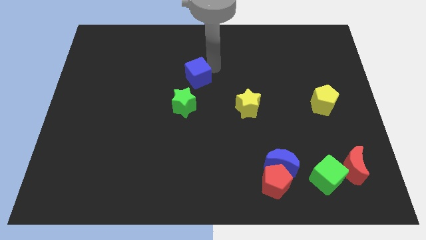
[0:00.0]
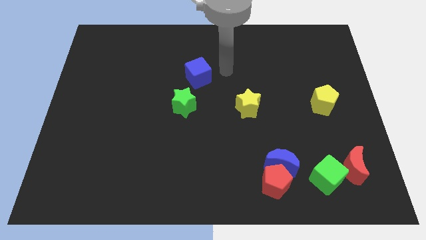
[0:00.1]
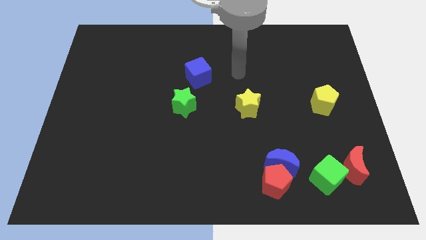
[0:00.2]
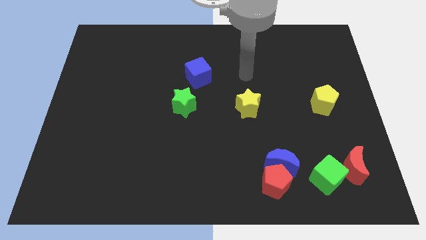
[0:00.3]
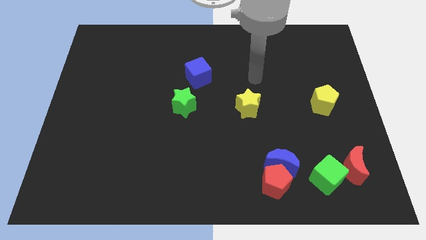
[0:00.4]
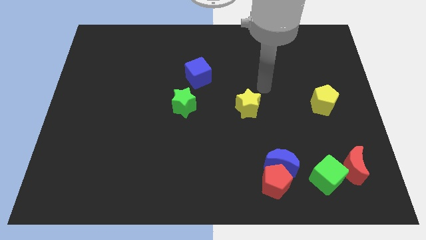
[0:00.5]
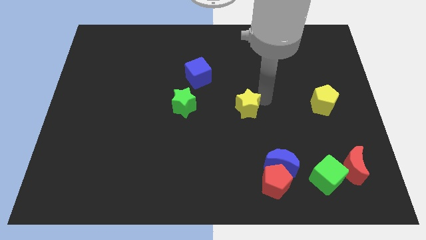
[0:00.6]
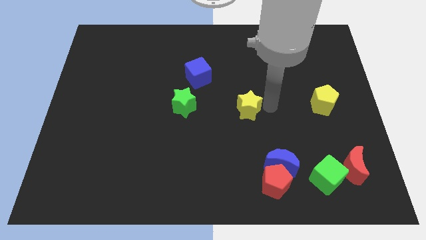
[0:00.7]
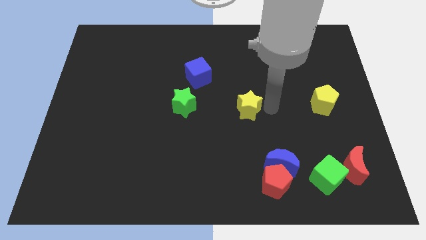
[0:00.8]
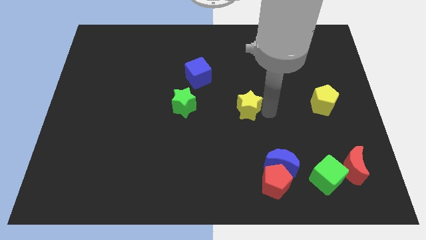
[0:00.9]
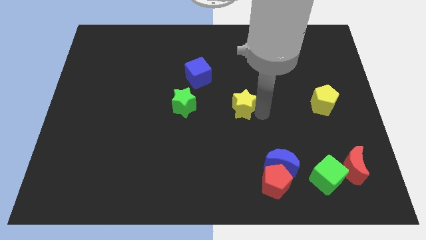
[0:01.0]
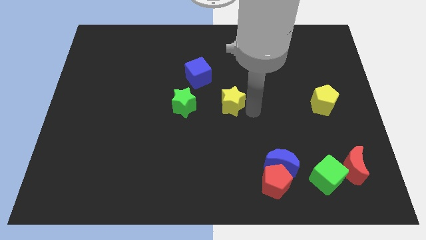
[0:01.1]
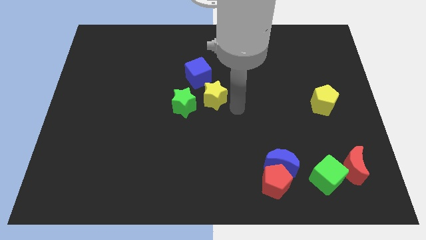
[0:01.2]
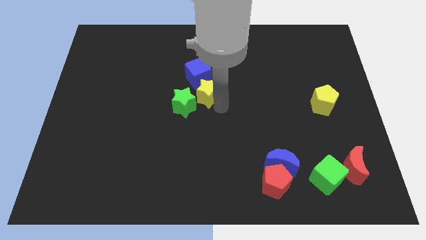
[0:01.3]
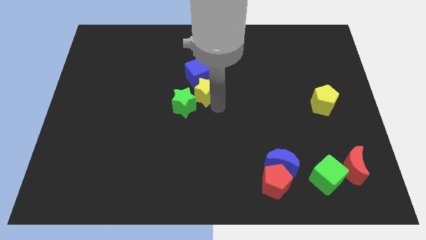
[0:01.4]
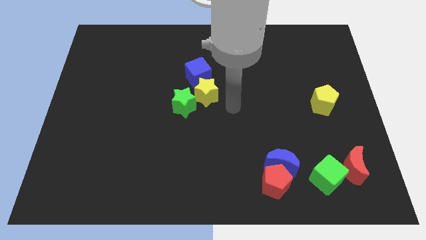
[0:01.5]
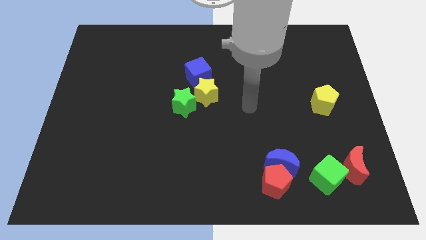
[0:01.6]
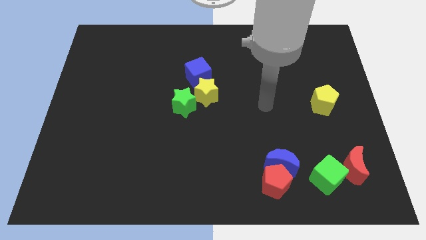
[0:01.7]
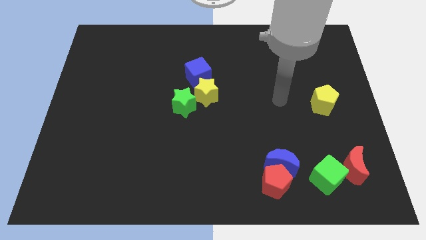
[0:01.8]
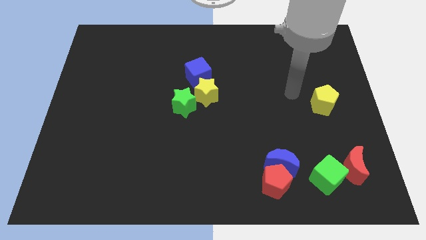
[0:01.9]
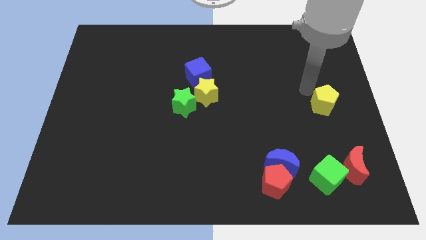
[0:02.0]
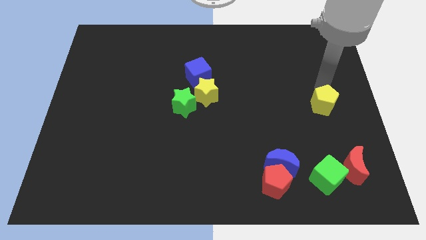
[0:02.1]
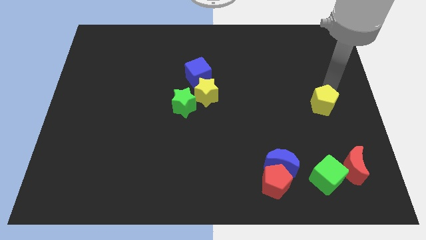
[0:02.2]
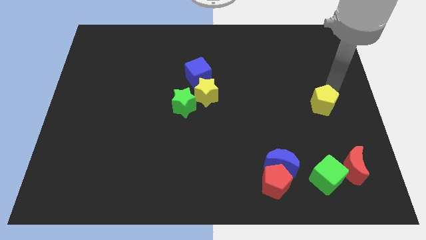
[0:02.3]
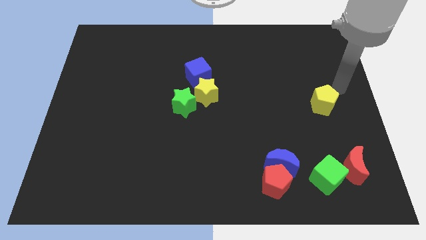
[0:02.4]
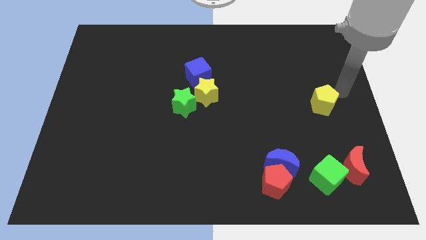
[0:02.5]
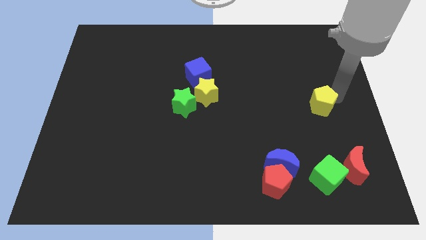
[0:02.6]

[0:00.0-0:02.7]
place the yellow star at the center of the board

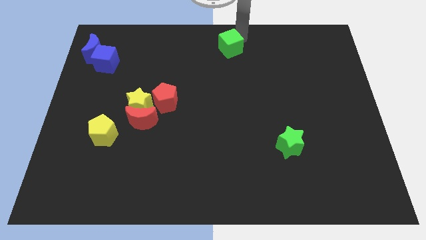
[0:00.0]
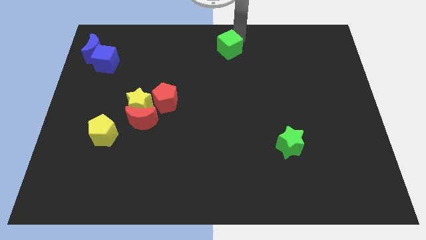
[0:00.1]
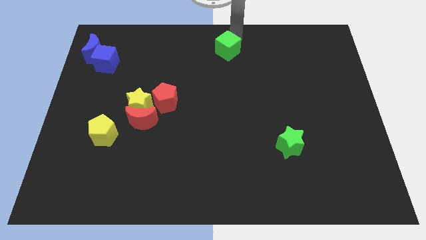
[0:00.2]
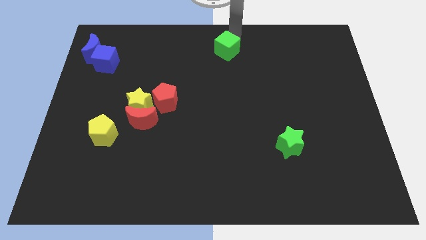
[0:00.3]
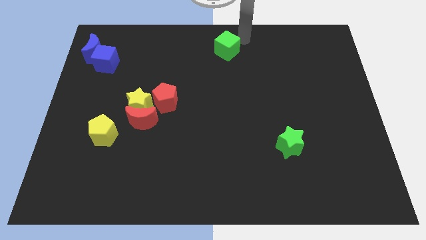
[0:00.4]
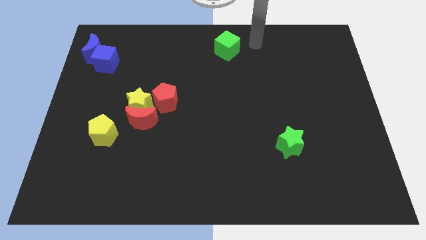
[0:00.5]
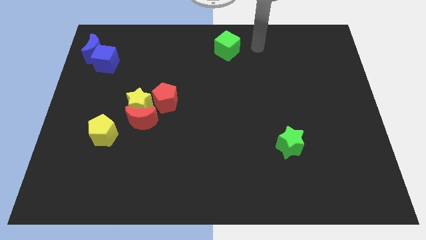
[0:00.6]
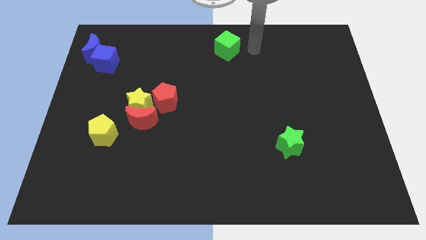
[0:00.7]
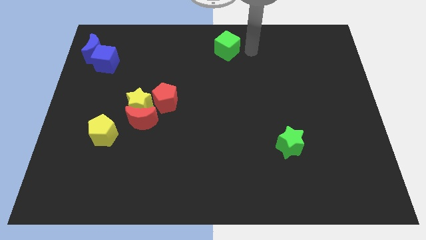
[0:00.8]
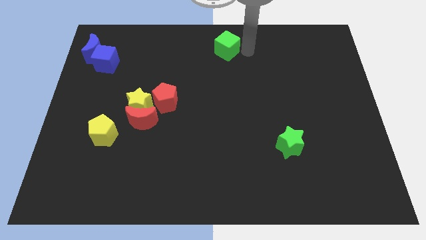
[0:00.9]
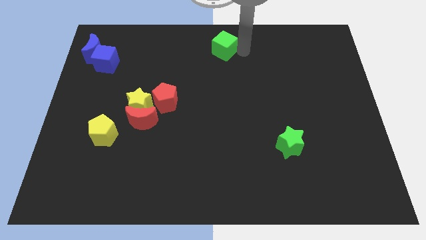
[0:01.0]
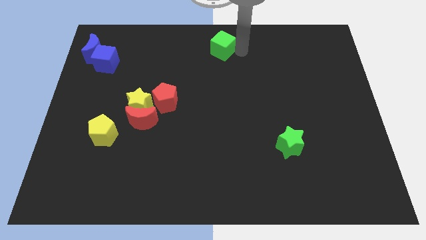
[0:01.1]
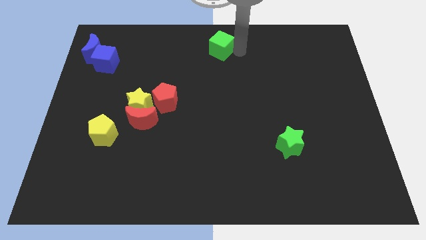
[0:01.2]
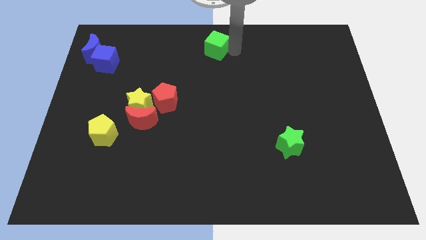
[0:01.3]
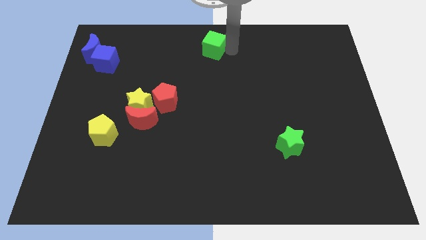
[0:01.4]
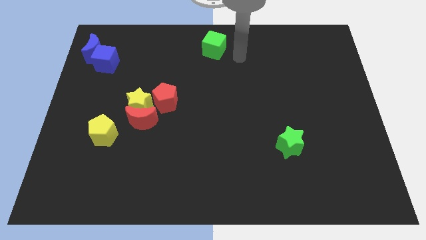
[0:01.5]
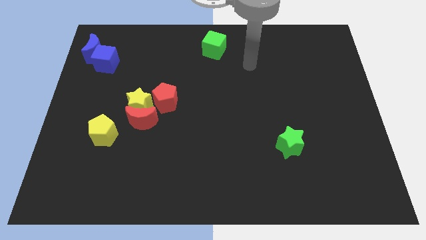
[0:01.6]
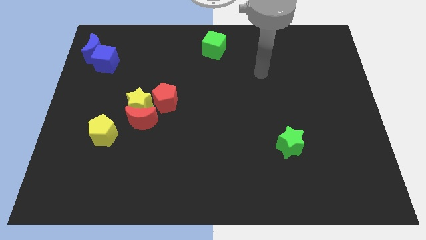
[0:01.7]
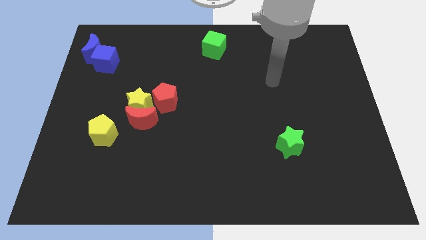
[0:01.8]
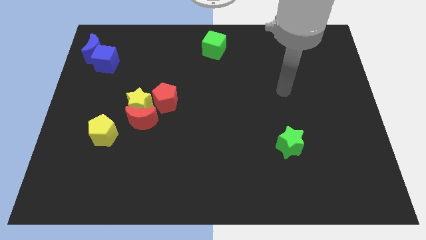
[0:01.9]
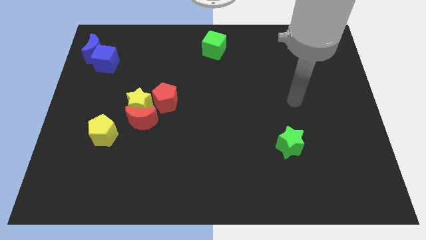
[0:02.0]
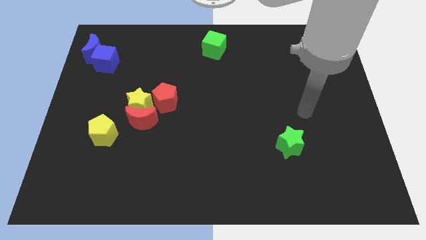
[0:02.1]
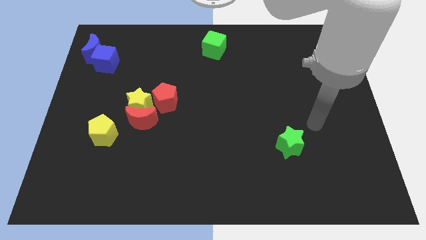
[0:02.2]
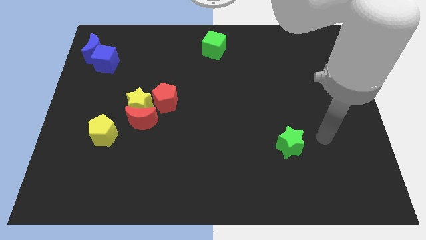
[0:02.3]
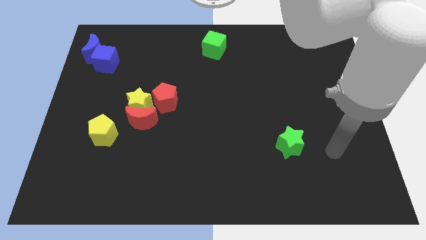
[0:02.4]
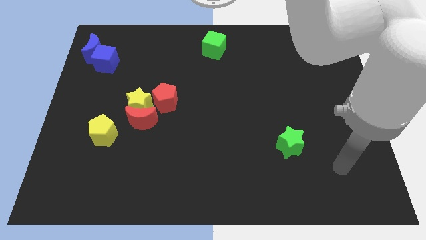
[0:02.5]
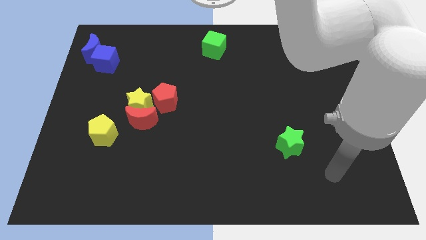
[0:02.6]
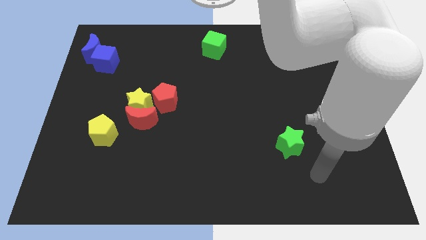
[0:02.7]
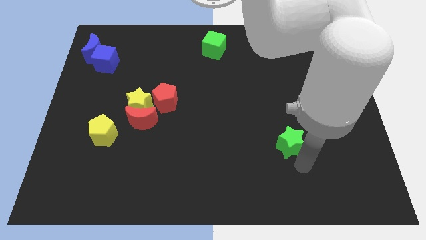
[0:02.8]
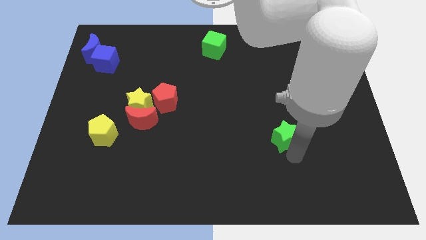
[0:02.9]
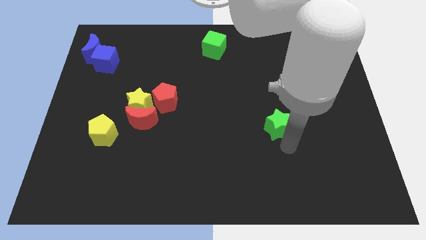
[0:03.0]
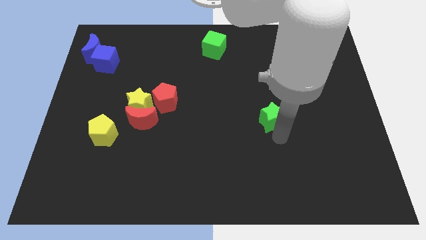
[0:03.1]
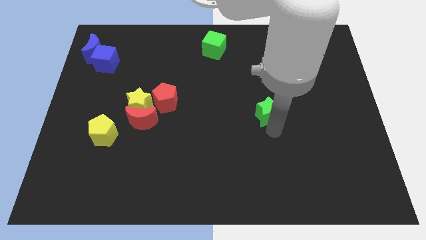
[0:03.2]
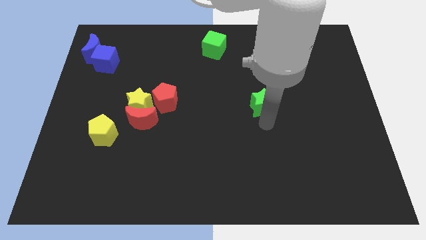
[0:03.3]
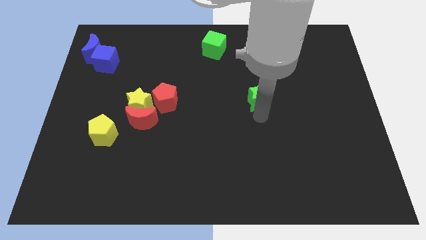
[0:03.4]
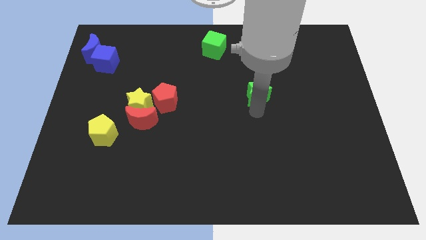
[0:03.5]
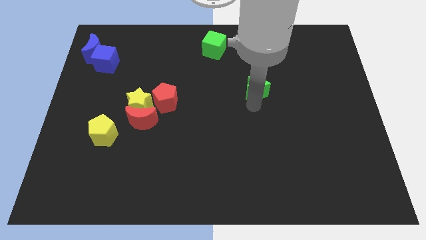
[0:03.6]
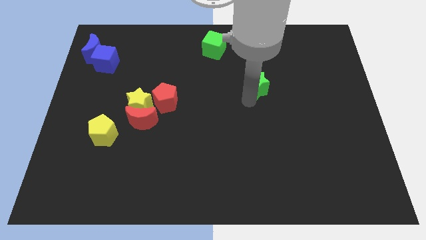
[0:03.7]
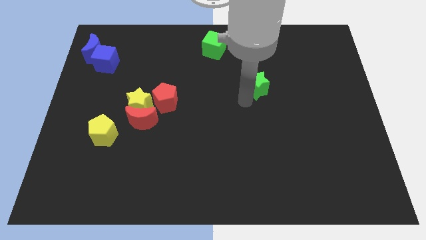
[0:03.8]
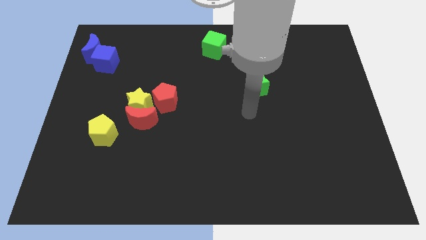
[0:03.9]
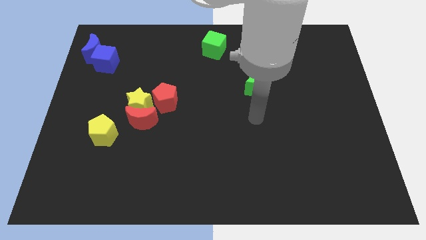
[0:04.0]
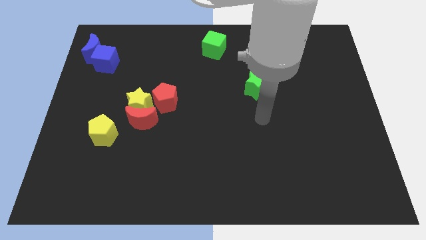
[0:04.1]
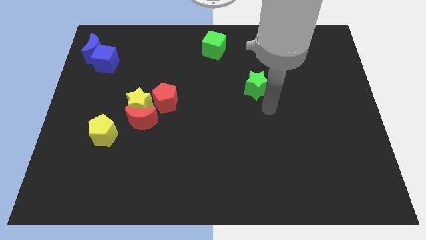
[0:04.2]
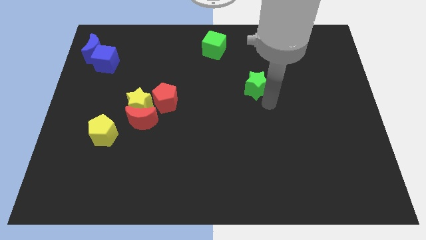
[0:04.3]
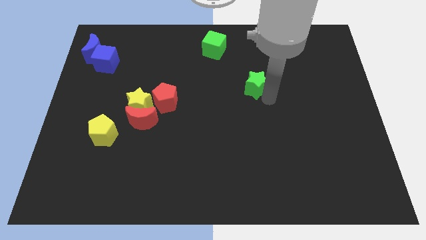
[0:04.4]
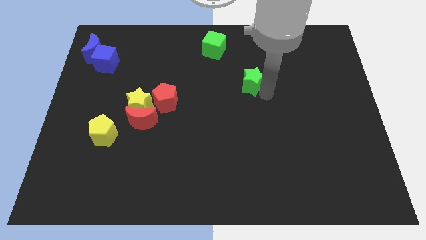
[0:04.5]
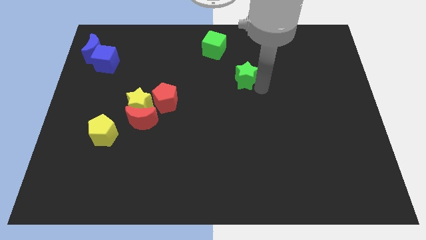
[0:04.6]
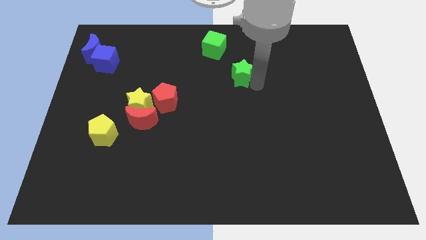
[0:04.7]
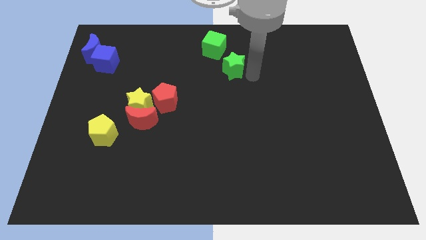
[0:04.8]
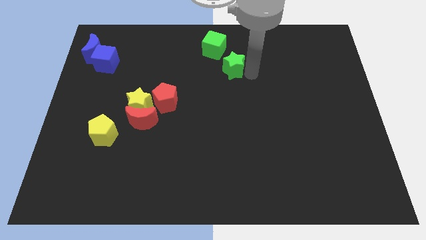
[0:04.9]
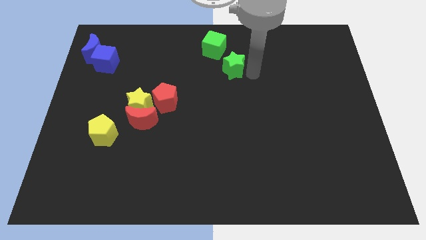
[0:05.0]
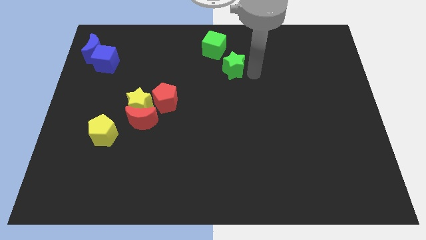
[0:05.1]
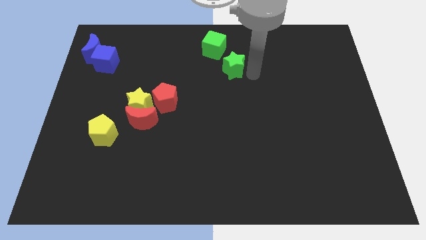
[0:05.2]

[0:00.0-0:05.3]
place green star below green cube

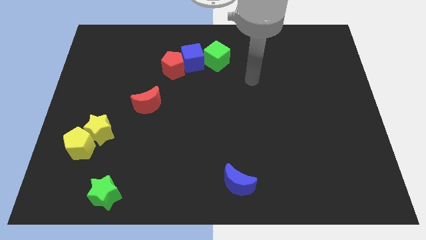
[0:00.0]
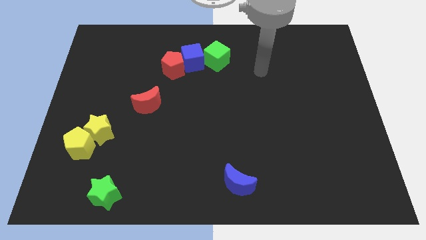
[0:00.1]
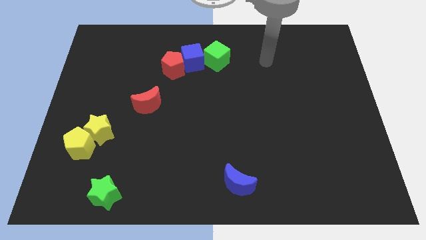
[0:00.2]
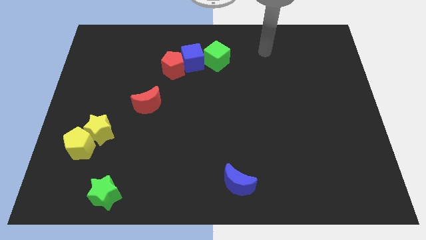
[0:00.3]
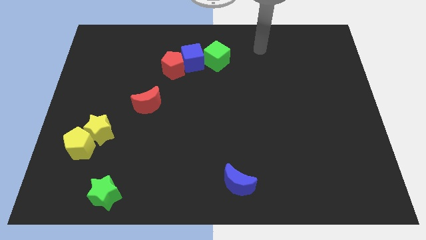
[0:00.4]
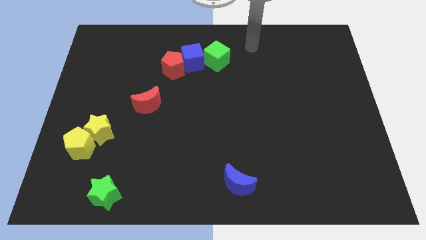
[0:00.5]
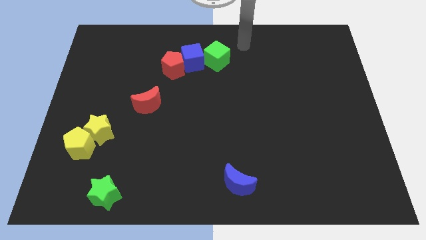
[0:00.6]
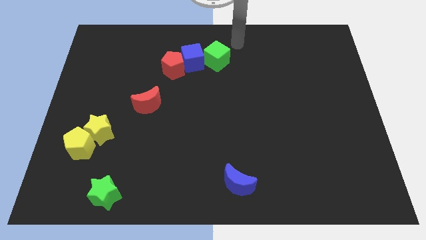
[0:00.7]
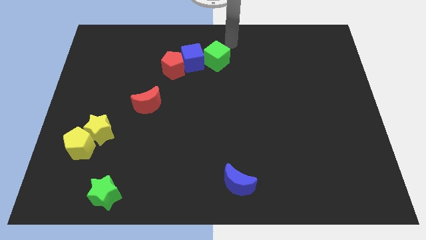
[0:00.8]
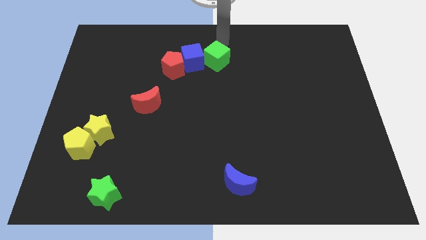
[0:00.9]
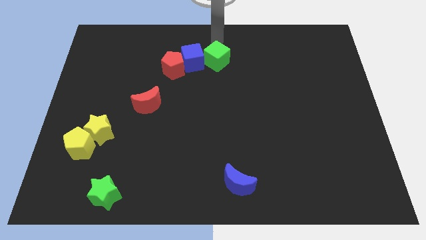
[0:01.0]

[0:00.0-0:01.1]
put hand at the top of green cube
